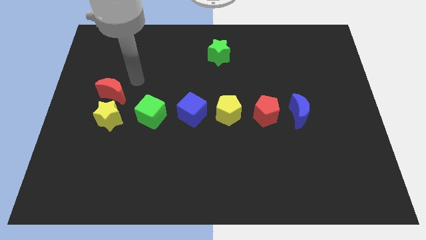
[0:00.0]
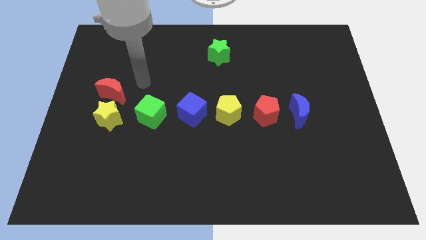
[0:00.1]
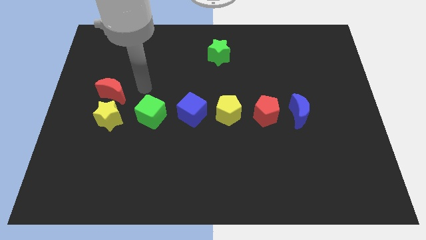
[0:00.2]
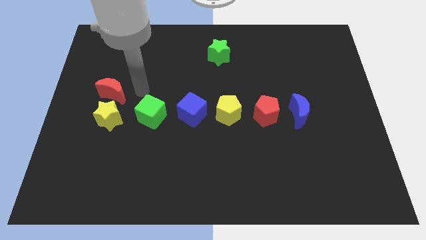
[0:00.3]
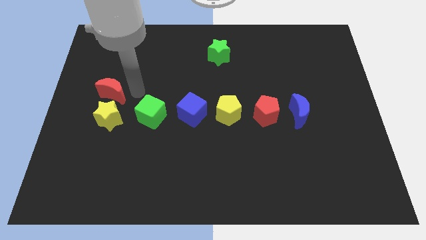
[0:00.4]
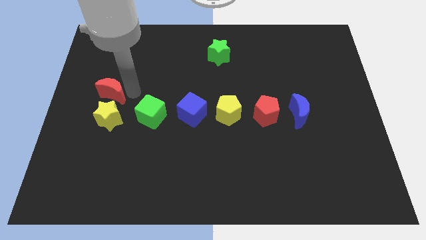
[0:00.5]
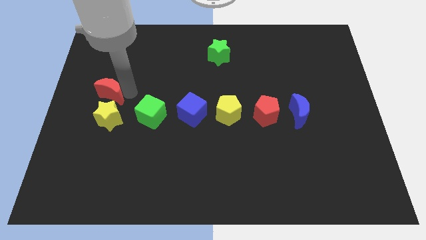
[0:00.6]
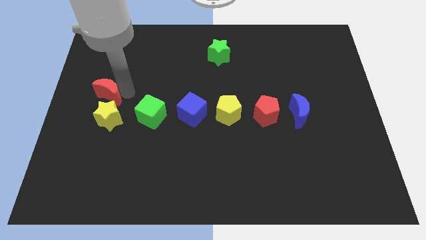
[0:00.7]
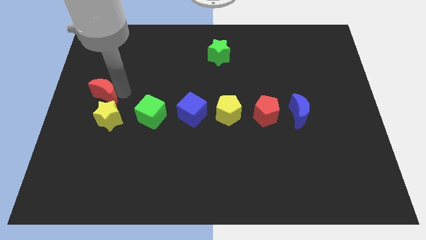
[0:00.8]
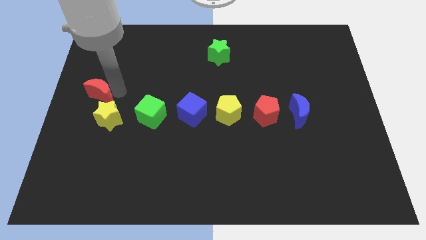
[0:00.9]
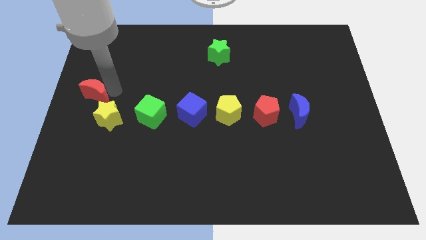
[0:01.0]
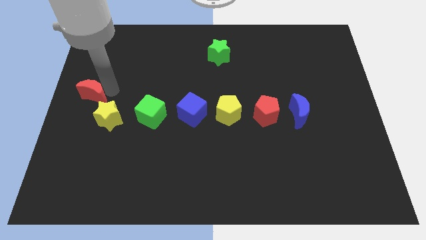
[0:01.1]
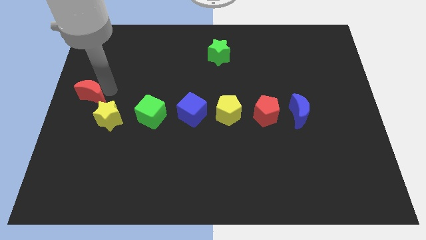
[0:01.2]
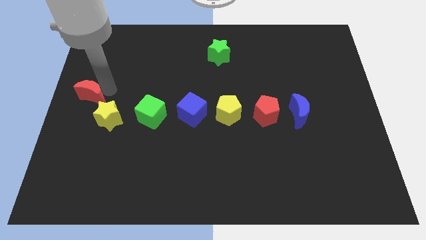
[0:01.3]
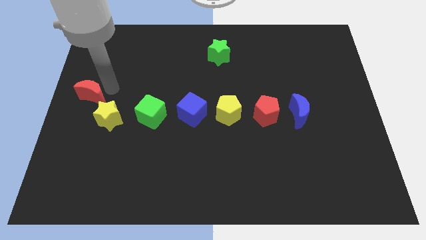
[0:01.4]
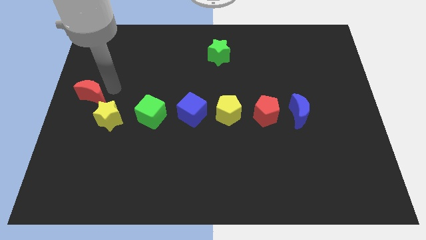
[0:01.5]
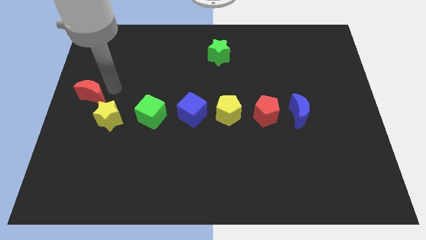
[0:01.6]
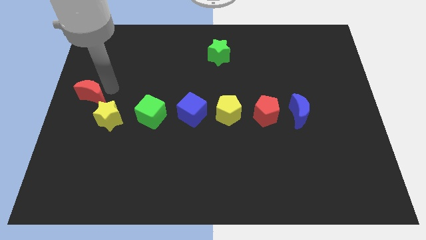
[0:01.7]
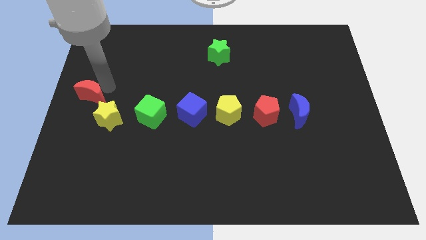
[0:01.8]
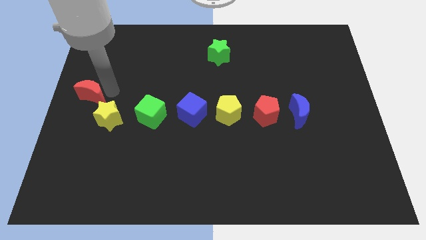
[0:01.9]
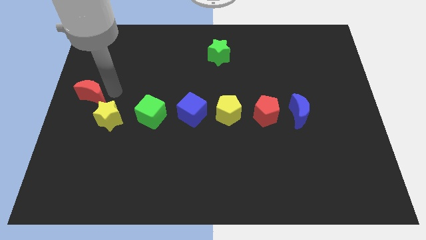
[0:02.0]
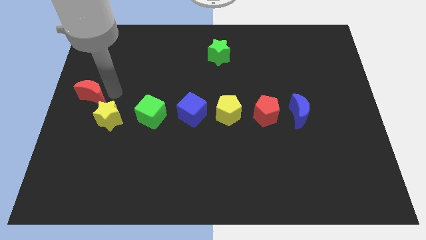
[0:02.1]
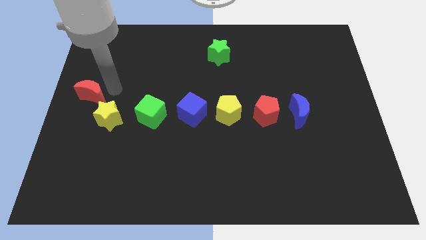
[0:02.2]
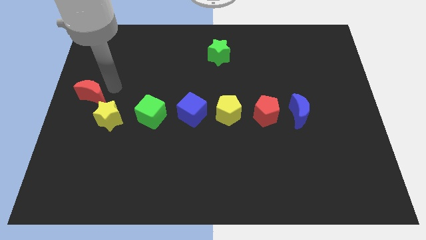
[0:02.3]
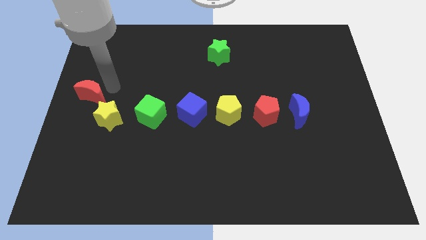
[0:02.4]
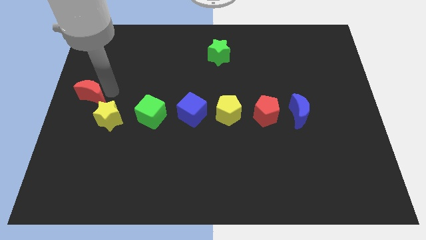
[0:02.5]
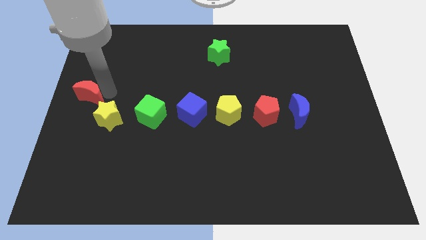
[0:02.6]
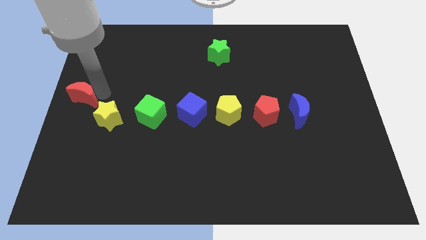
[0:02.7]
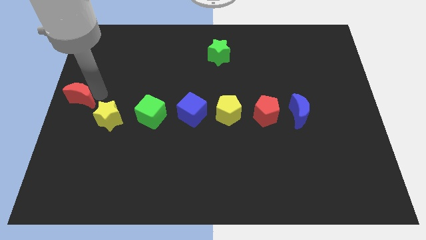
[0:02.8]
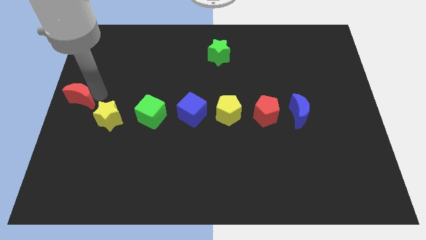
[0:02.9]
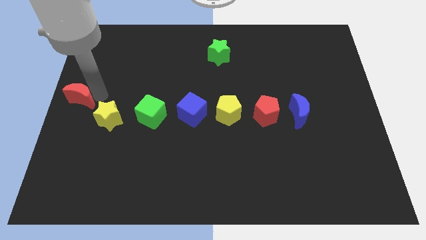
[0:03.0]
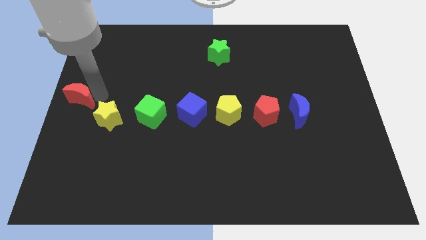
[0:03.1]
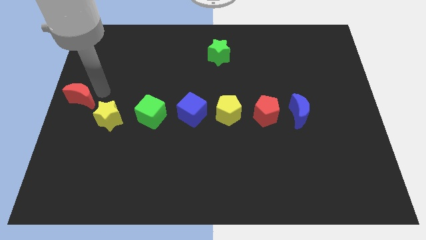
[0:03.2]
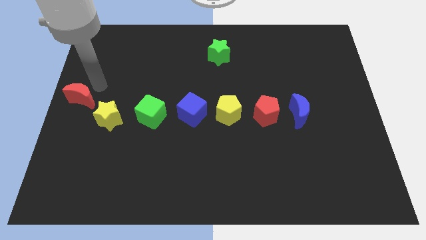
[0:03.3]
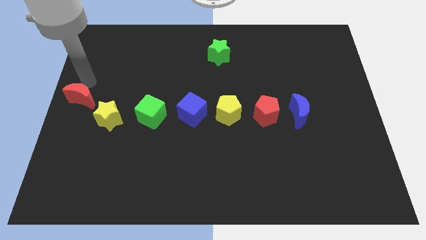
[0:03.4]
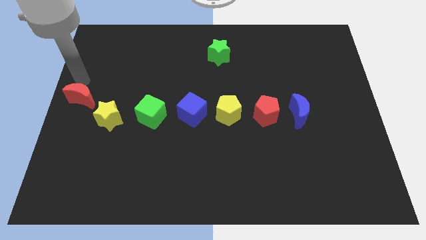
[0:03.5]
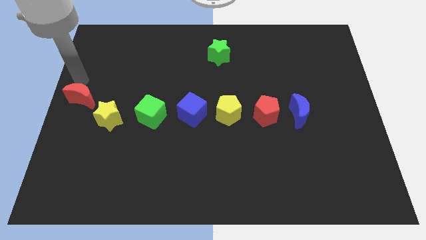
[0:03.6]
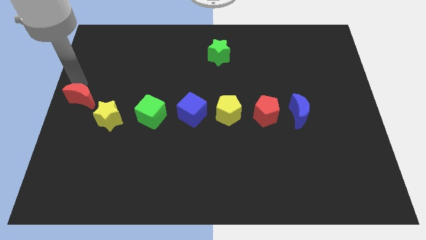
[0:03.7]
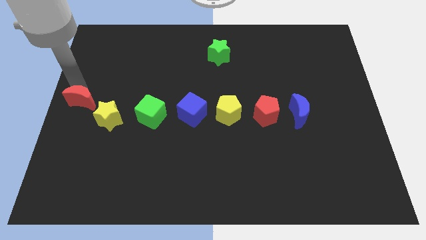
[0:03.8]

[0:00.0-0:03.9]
move red crescent towards the yellow star

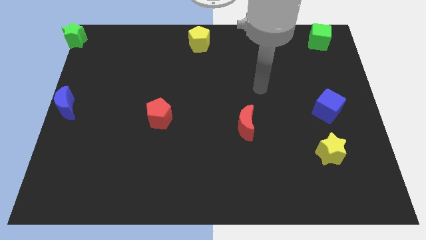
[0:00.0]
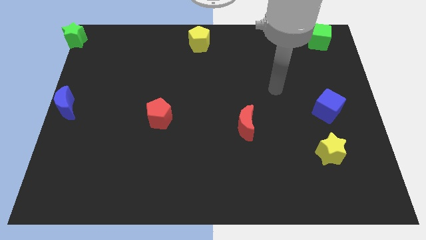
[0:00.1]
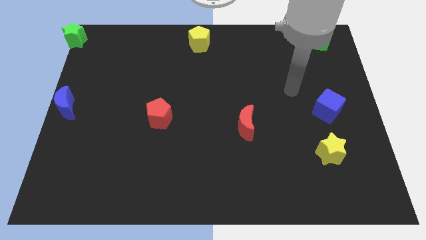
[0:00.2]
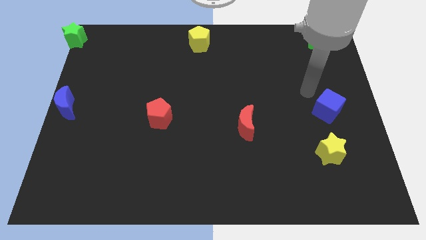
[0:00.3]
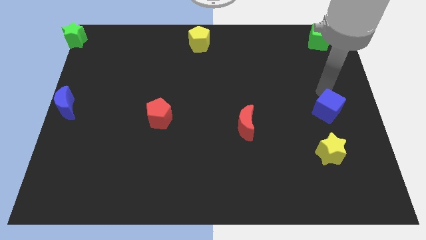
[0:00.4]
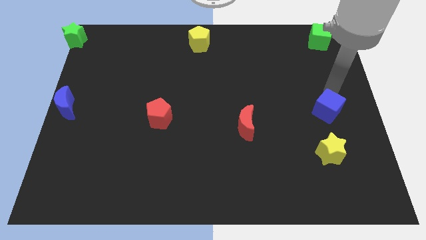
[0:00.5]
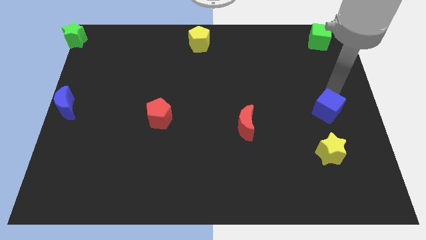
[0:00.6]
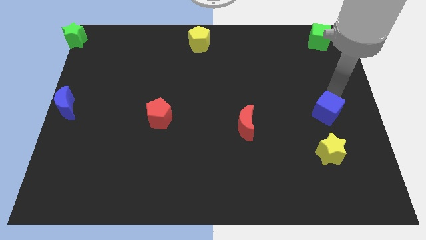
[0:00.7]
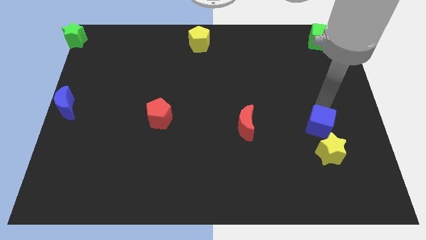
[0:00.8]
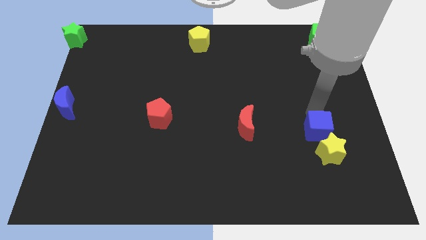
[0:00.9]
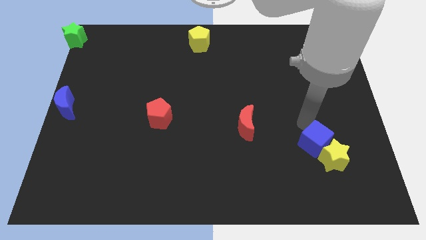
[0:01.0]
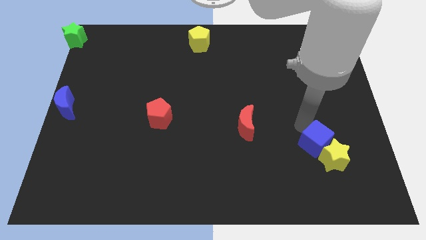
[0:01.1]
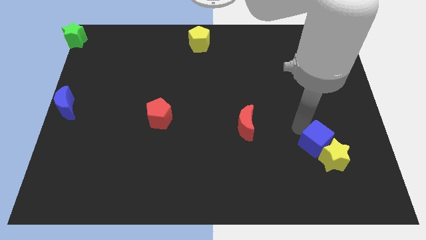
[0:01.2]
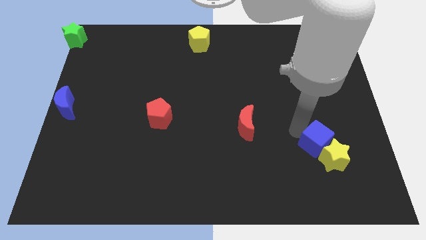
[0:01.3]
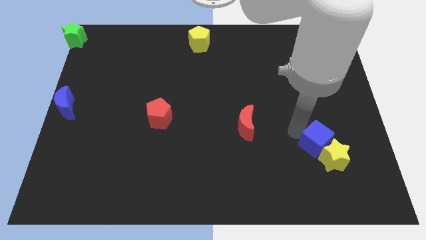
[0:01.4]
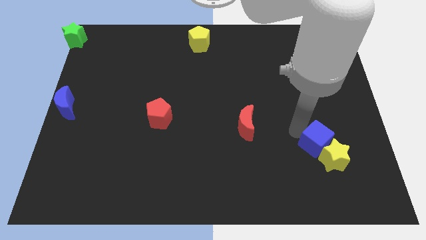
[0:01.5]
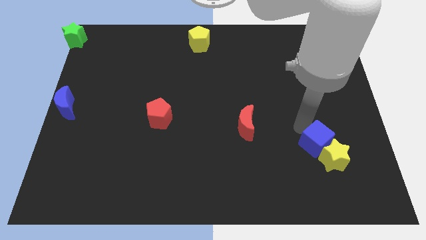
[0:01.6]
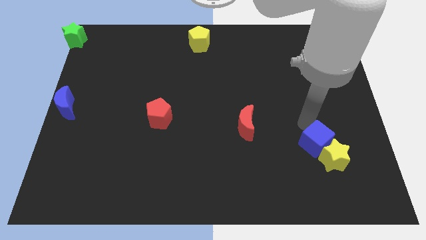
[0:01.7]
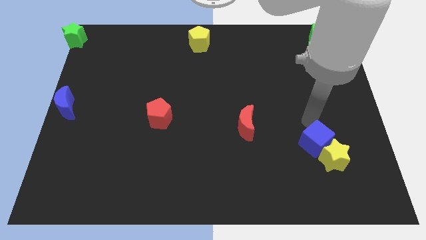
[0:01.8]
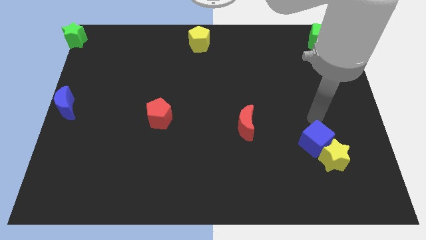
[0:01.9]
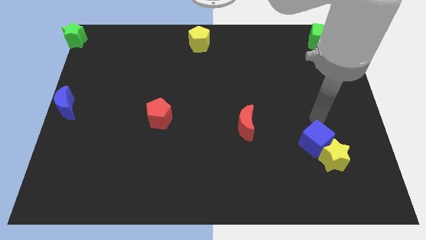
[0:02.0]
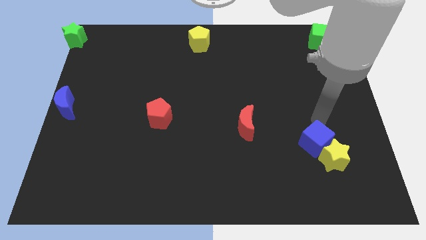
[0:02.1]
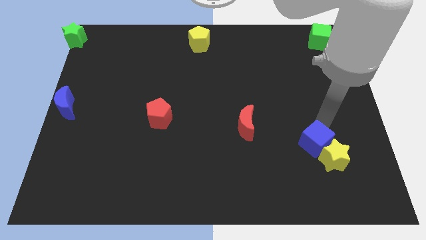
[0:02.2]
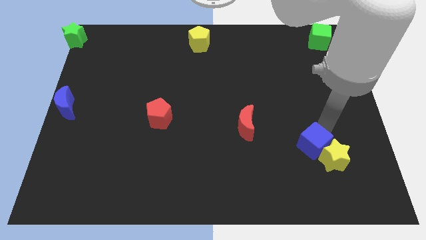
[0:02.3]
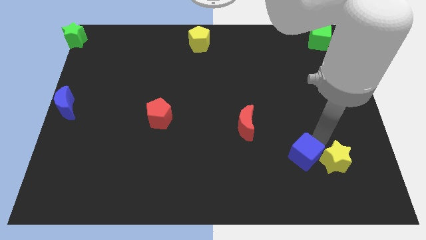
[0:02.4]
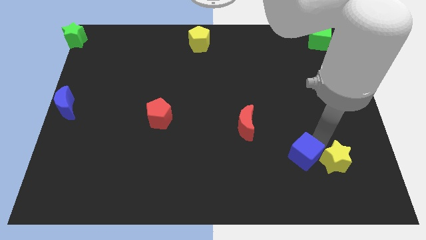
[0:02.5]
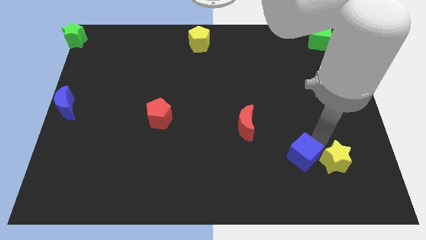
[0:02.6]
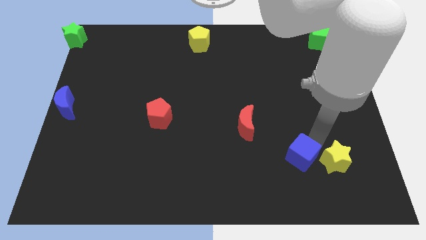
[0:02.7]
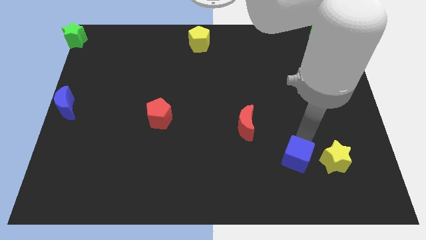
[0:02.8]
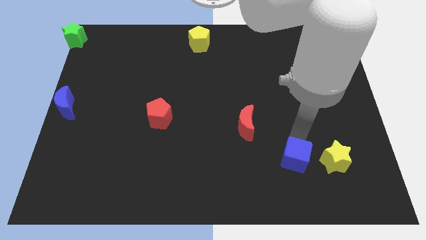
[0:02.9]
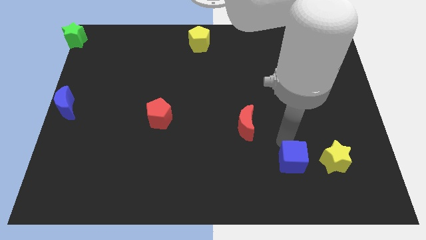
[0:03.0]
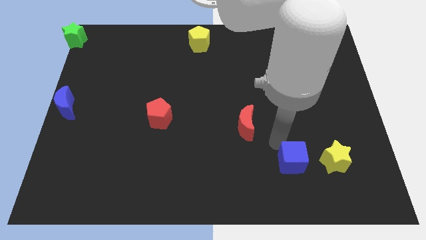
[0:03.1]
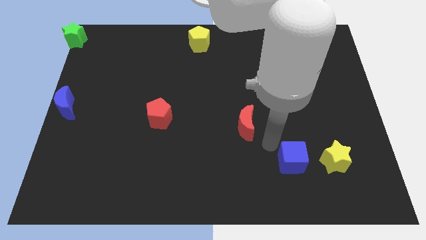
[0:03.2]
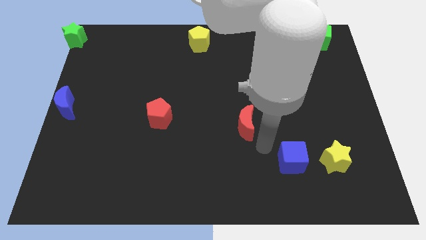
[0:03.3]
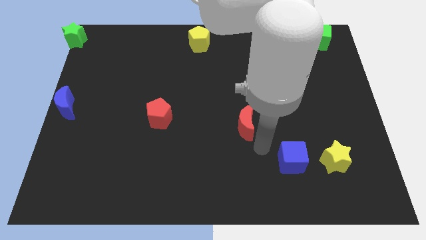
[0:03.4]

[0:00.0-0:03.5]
place the blue cube to the left of the yellow star

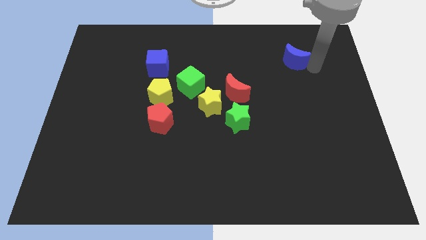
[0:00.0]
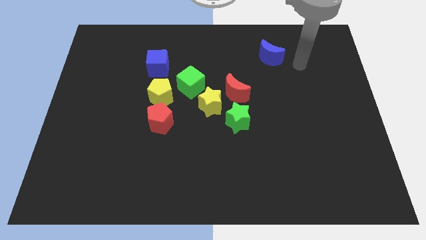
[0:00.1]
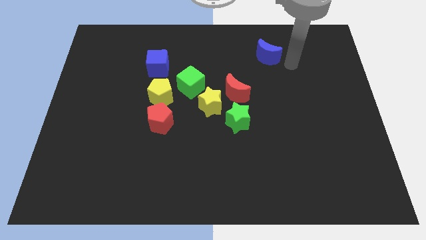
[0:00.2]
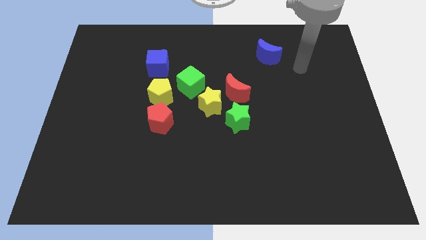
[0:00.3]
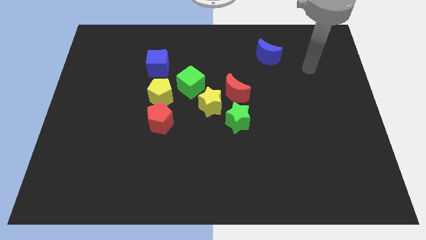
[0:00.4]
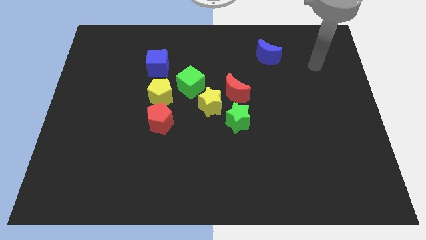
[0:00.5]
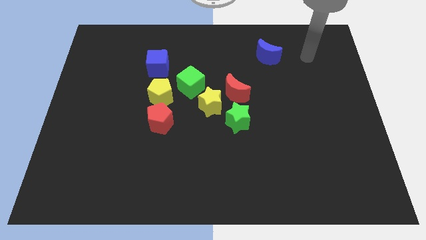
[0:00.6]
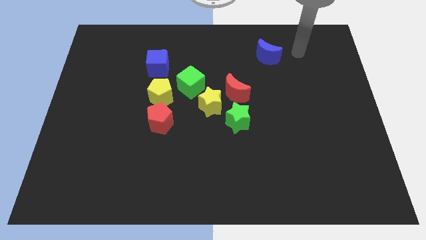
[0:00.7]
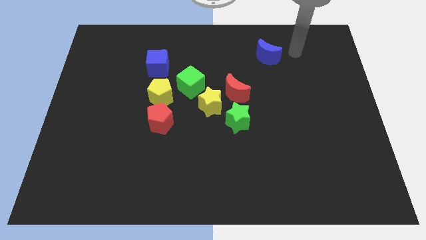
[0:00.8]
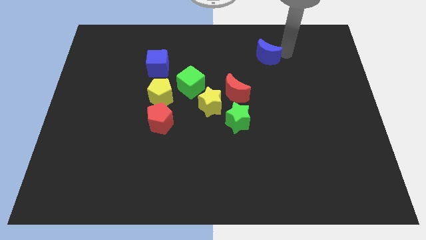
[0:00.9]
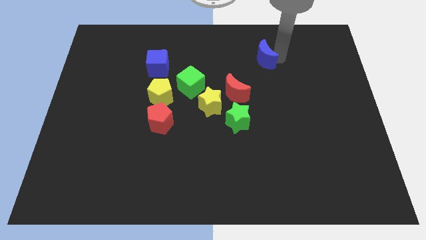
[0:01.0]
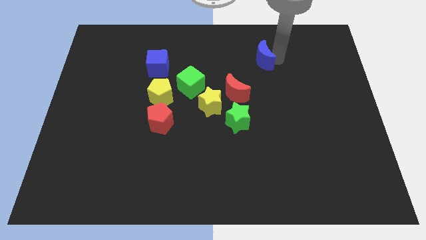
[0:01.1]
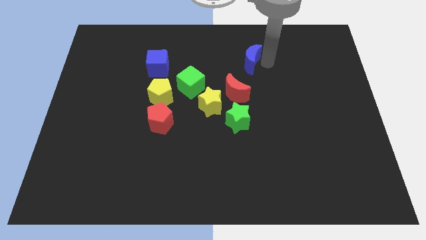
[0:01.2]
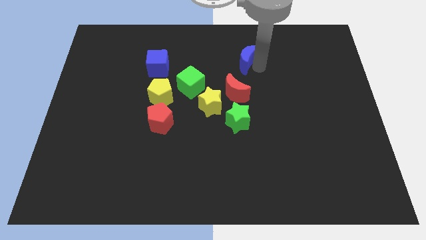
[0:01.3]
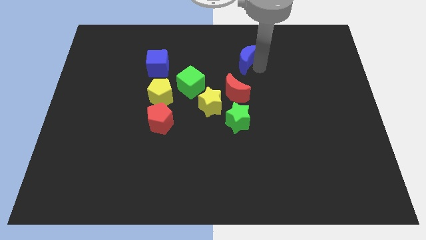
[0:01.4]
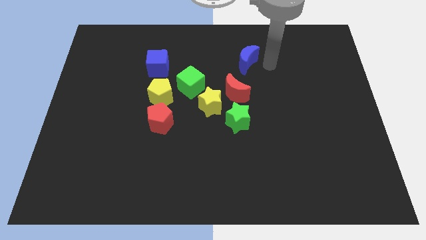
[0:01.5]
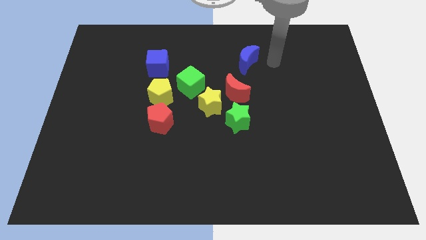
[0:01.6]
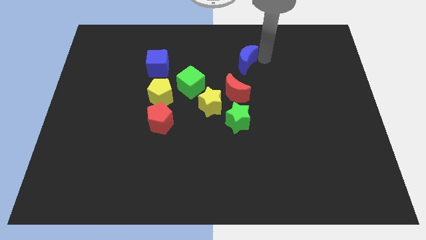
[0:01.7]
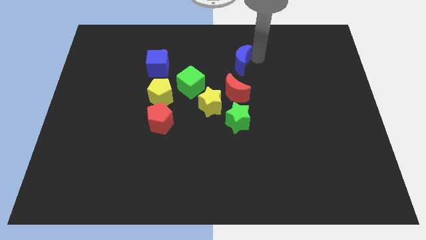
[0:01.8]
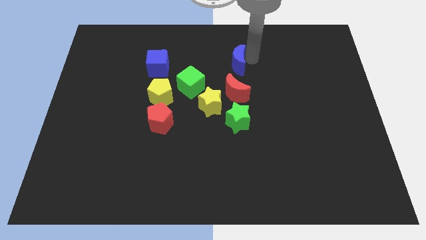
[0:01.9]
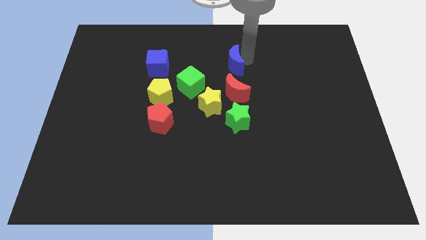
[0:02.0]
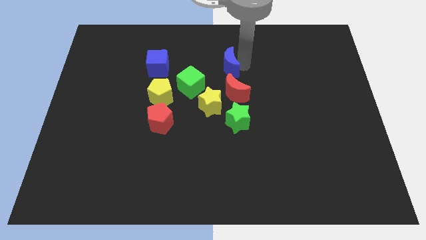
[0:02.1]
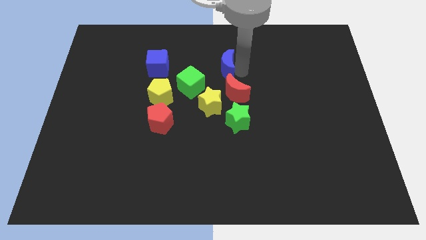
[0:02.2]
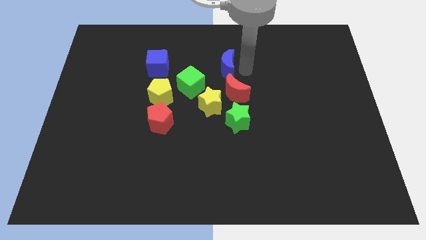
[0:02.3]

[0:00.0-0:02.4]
push the blue crescent to the top of the red crescent
